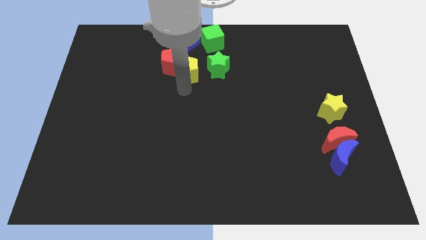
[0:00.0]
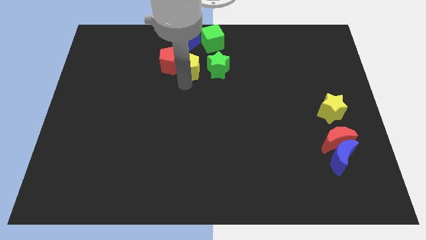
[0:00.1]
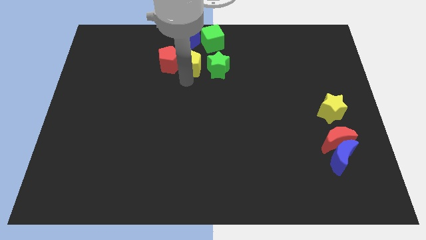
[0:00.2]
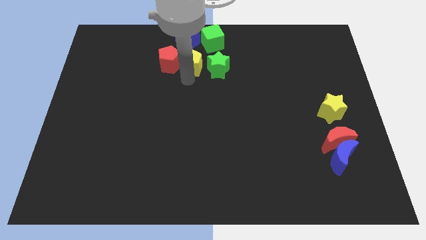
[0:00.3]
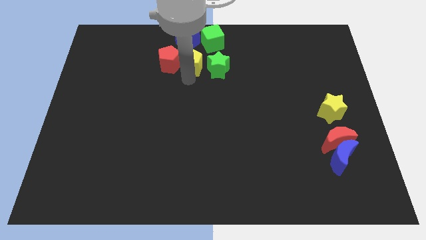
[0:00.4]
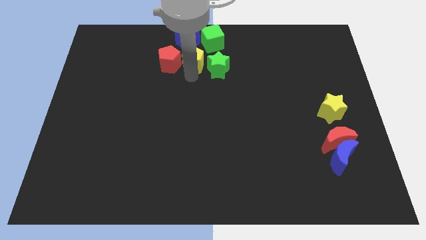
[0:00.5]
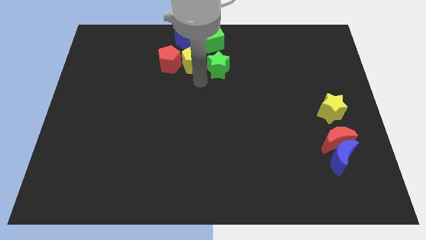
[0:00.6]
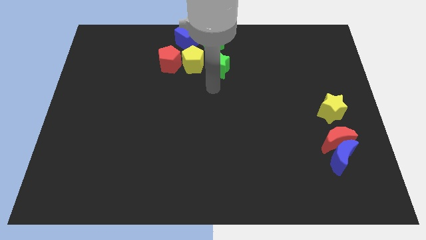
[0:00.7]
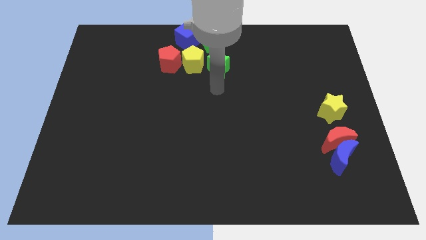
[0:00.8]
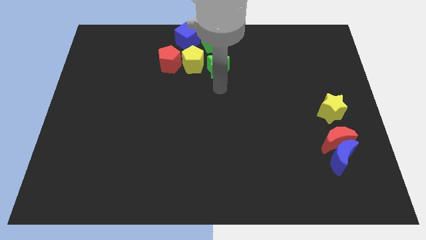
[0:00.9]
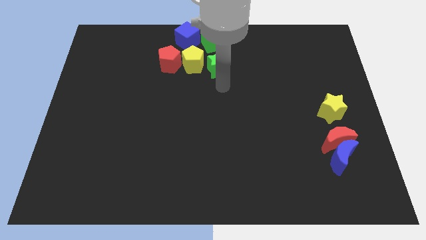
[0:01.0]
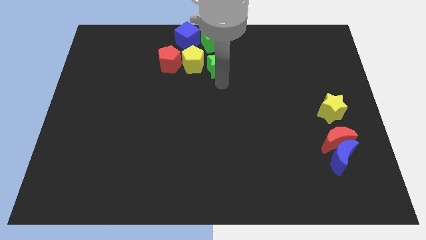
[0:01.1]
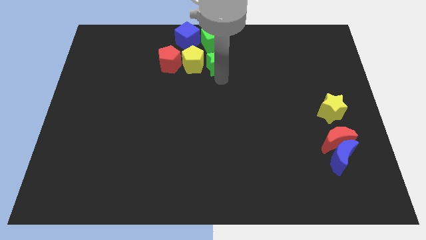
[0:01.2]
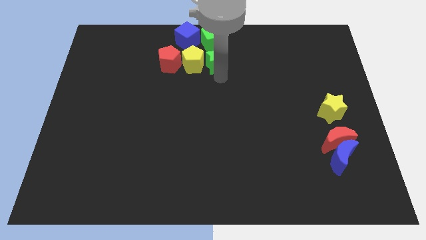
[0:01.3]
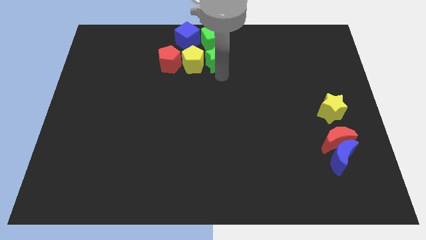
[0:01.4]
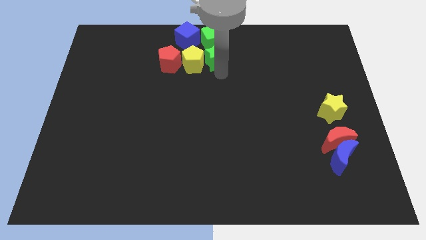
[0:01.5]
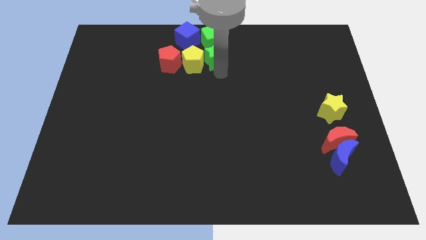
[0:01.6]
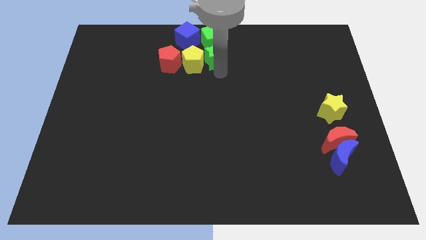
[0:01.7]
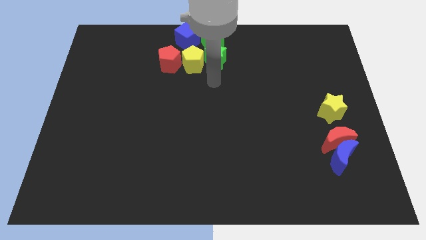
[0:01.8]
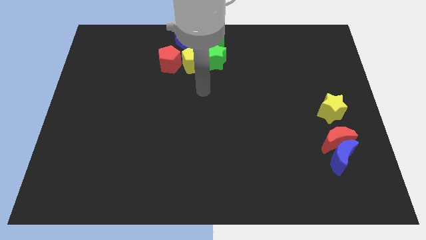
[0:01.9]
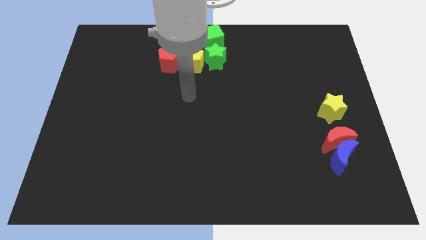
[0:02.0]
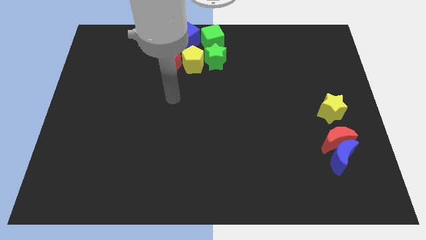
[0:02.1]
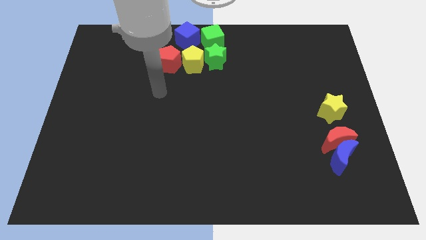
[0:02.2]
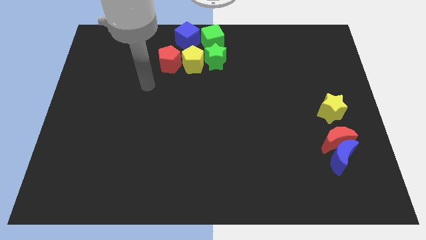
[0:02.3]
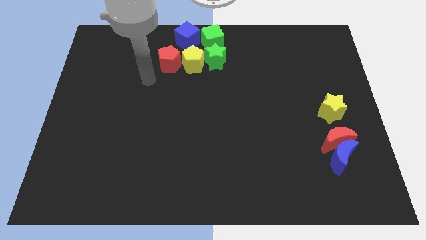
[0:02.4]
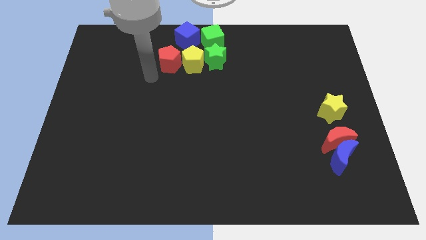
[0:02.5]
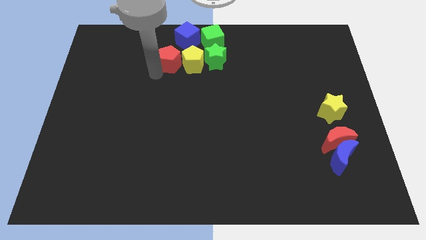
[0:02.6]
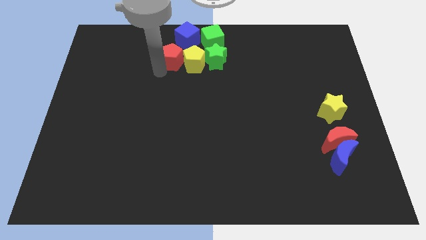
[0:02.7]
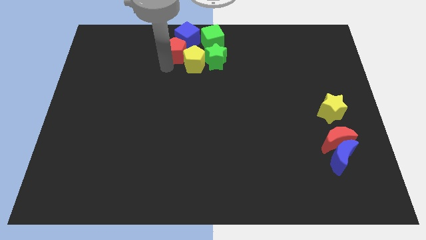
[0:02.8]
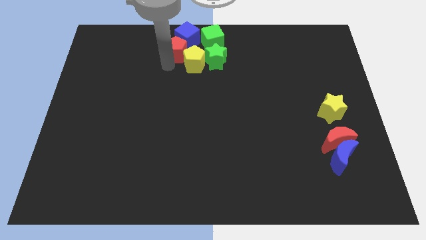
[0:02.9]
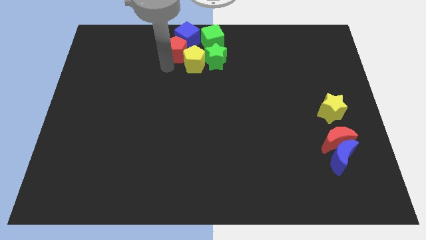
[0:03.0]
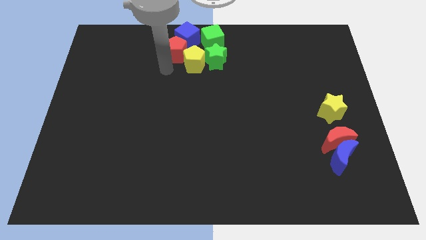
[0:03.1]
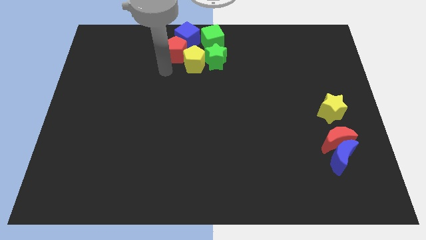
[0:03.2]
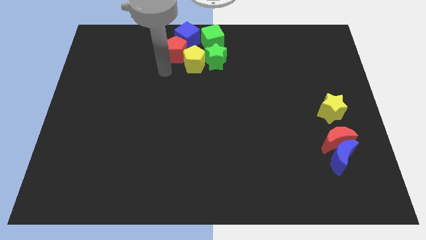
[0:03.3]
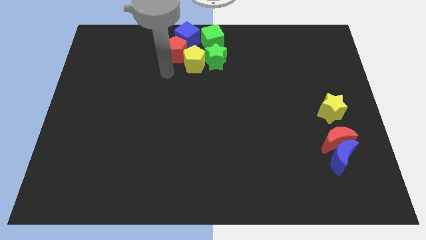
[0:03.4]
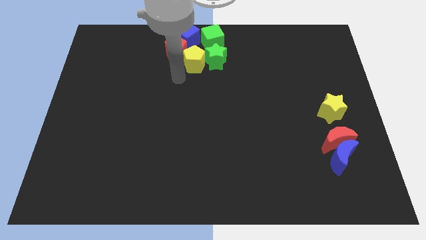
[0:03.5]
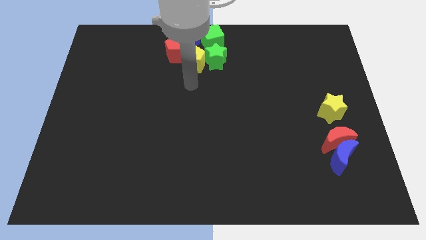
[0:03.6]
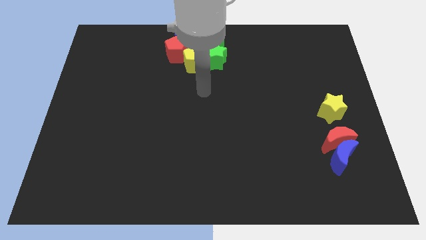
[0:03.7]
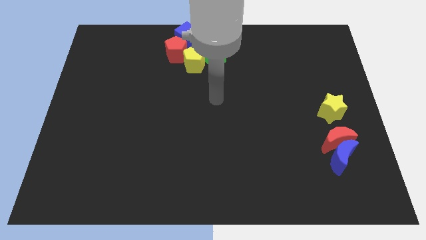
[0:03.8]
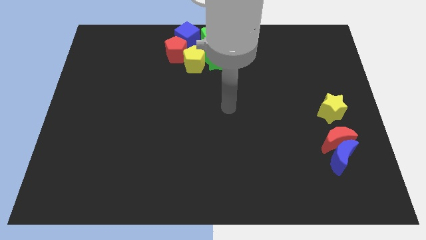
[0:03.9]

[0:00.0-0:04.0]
adjust the group of blocks at the top center of the board

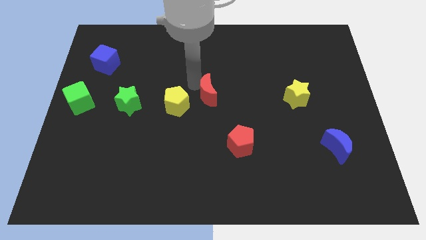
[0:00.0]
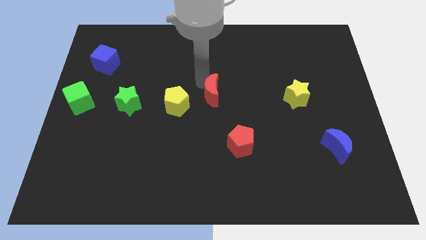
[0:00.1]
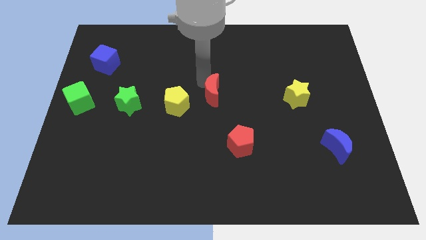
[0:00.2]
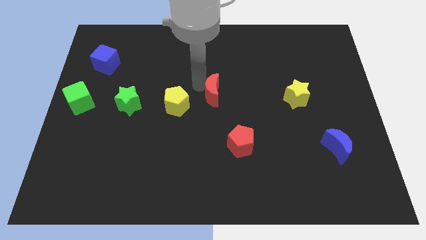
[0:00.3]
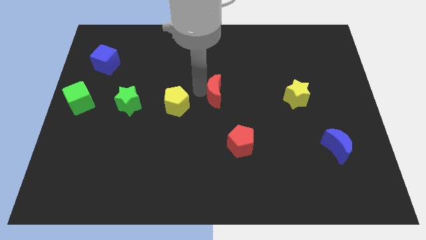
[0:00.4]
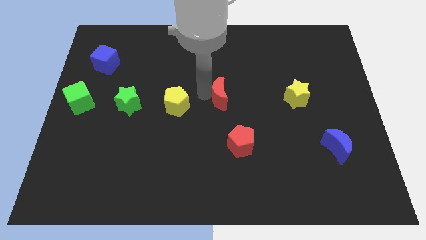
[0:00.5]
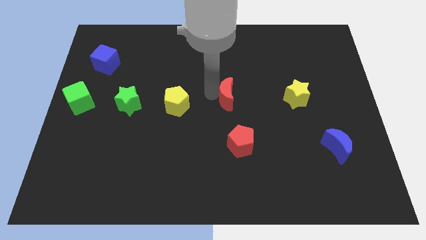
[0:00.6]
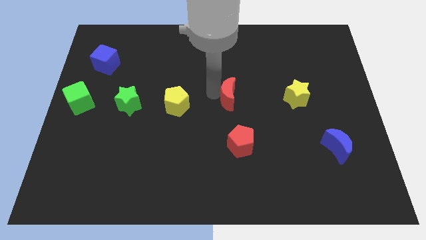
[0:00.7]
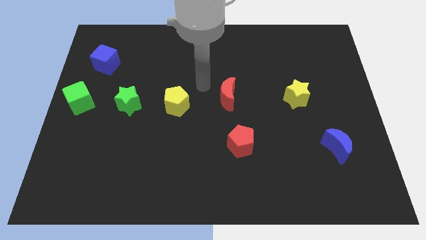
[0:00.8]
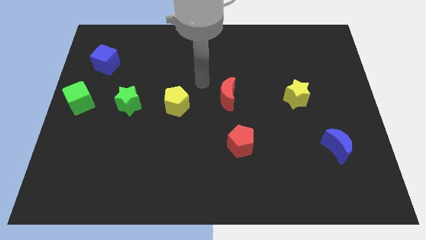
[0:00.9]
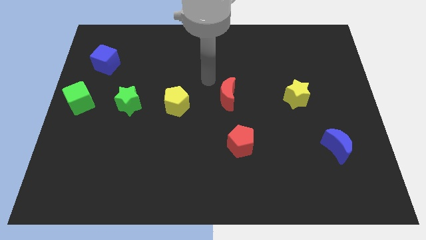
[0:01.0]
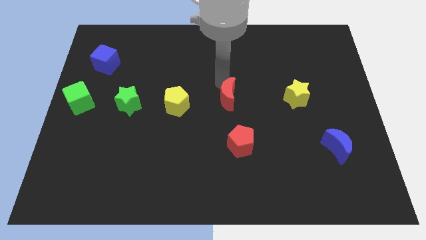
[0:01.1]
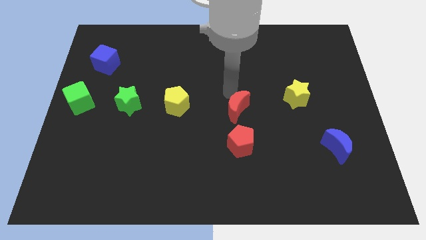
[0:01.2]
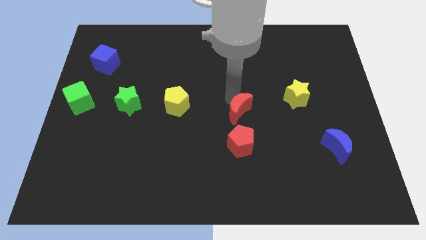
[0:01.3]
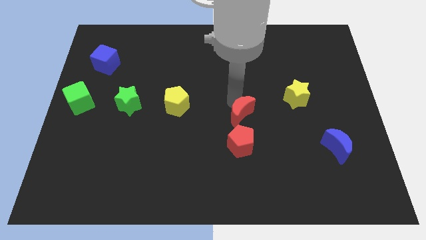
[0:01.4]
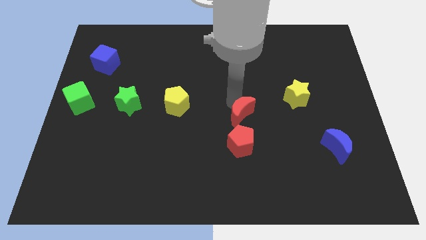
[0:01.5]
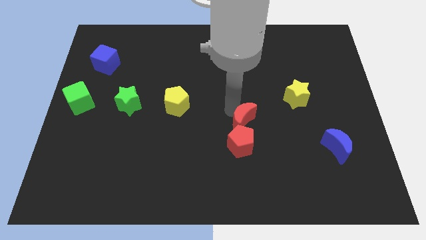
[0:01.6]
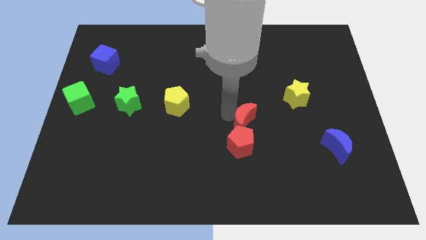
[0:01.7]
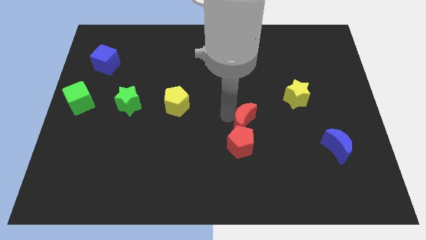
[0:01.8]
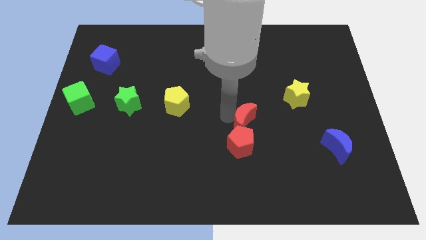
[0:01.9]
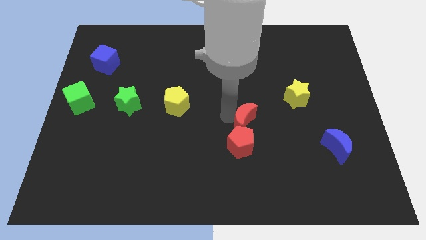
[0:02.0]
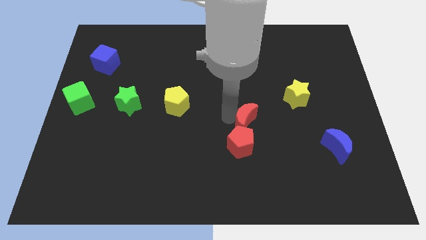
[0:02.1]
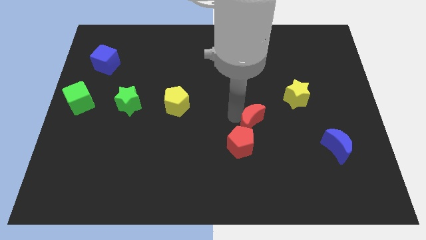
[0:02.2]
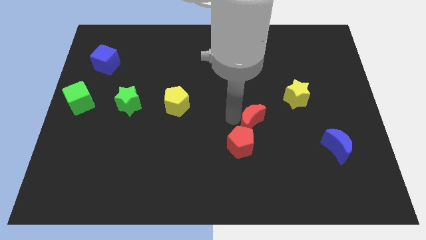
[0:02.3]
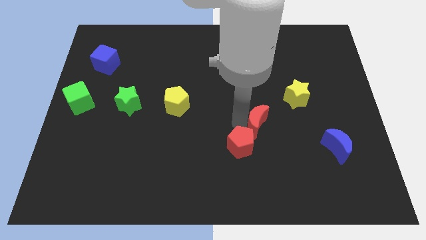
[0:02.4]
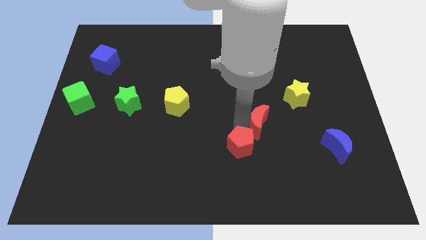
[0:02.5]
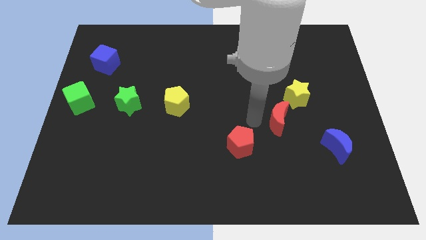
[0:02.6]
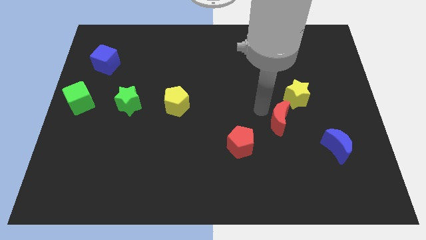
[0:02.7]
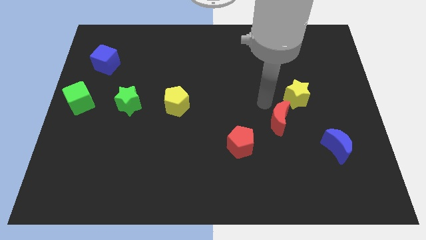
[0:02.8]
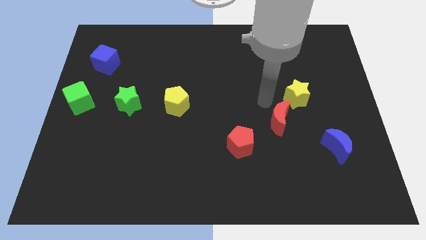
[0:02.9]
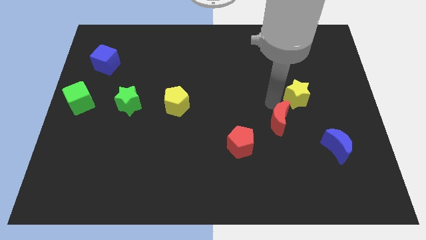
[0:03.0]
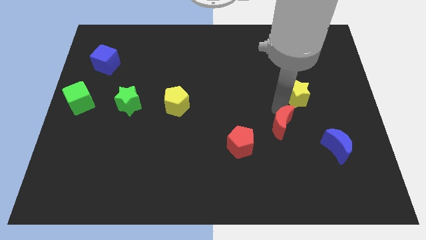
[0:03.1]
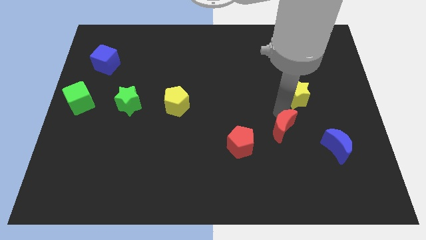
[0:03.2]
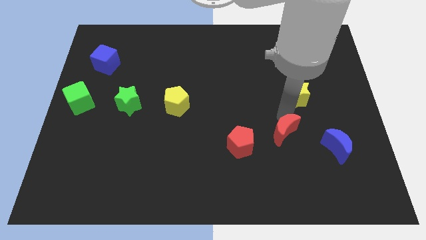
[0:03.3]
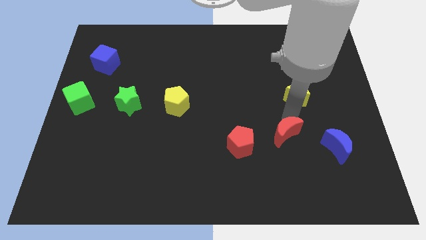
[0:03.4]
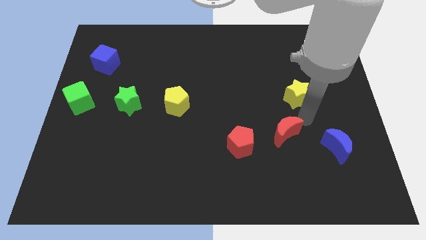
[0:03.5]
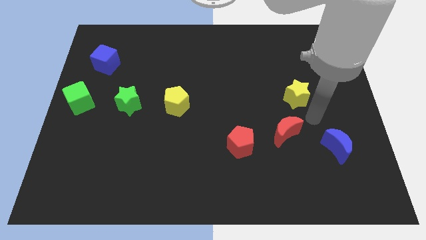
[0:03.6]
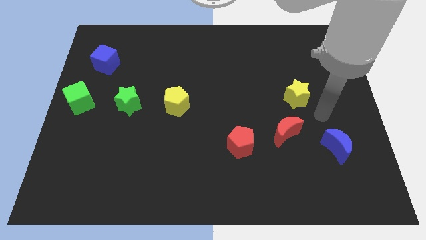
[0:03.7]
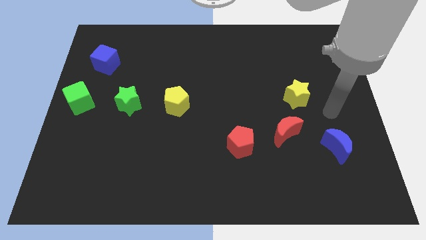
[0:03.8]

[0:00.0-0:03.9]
place the red crescent in between the red pentagon and the blue moon

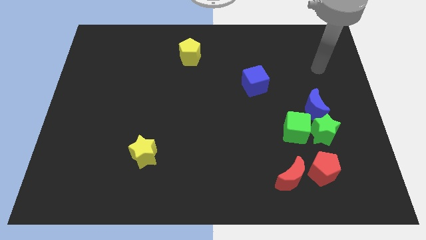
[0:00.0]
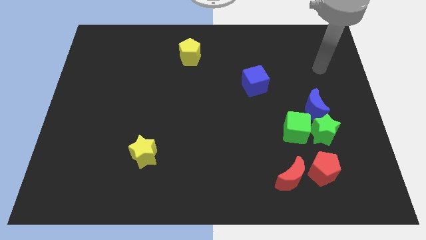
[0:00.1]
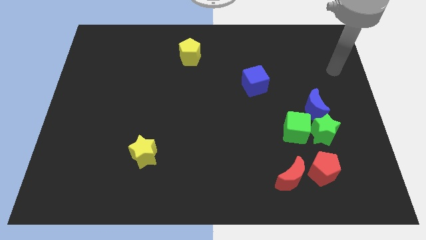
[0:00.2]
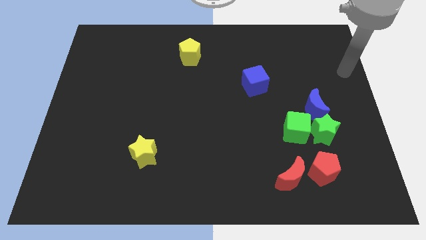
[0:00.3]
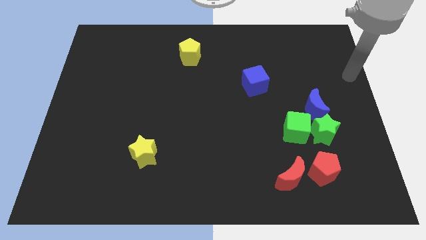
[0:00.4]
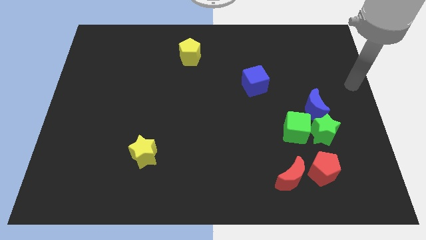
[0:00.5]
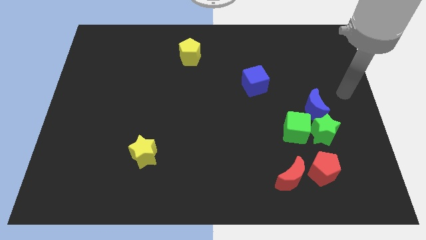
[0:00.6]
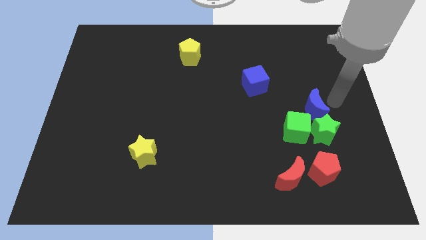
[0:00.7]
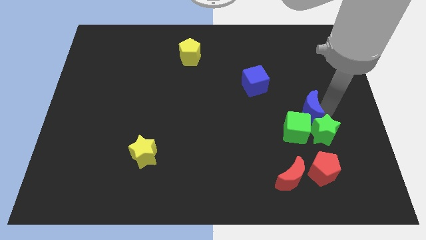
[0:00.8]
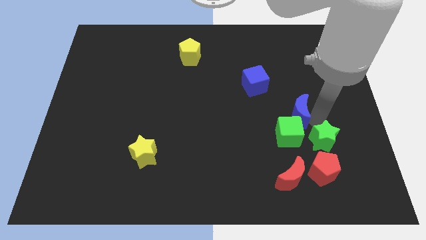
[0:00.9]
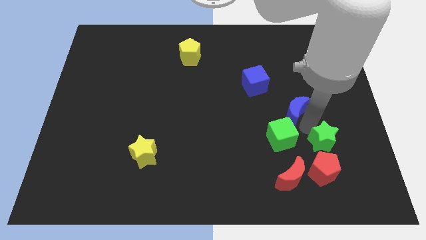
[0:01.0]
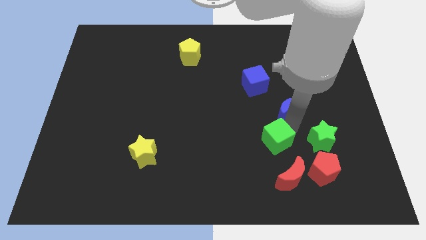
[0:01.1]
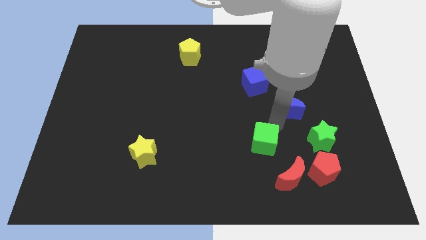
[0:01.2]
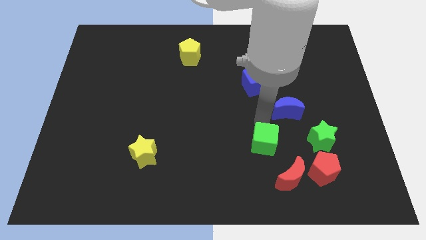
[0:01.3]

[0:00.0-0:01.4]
slide the blue moon and the green cube slightly to the left
